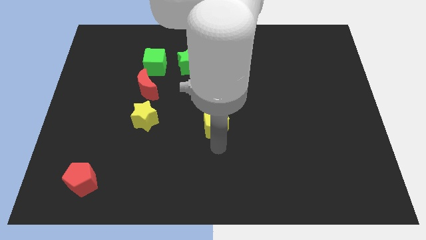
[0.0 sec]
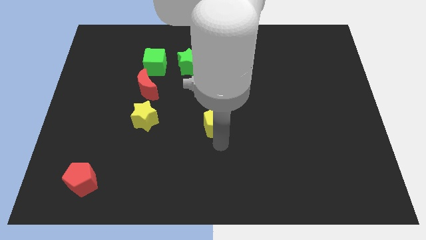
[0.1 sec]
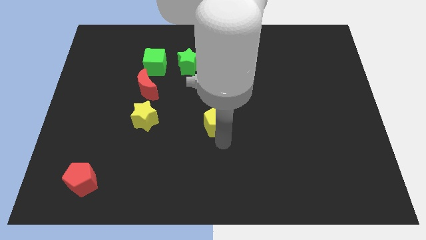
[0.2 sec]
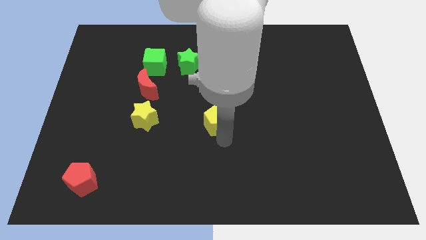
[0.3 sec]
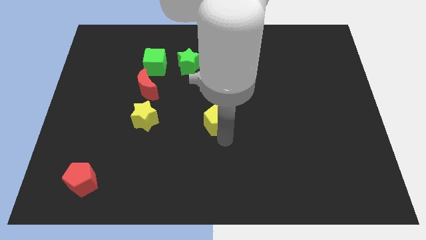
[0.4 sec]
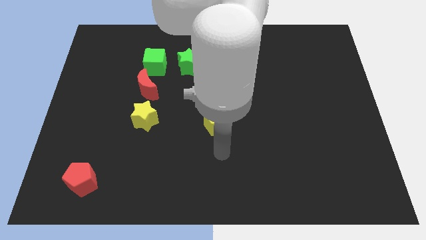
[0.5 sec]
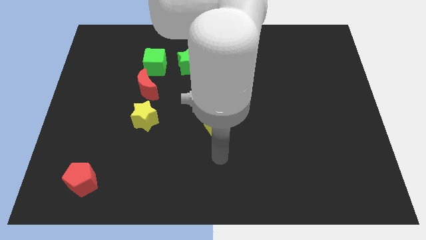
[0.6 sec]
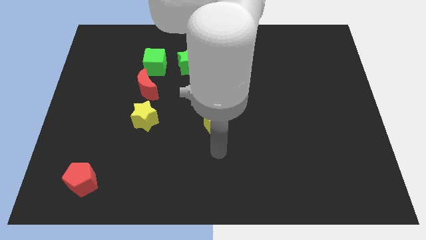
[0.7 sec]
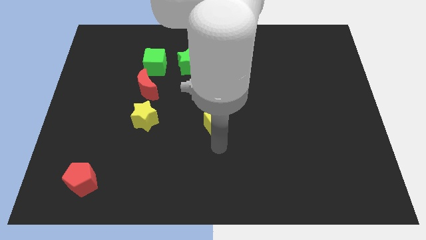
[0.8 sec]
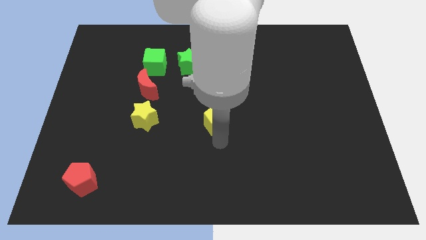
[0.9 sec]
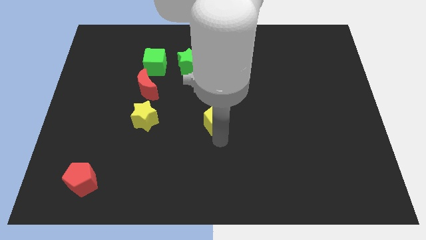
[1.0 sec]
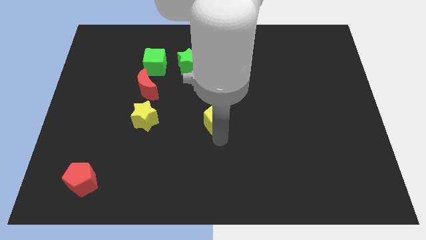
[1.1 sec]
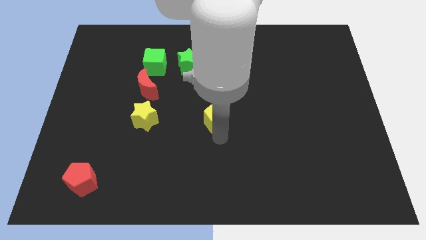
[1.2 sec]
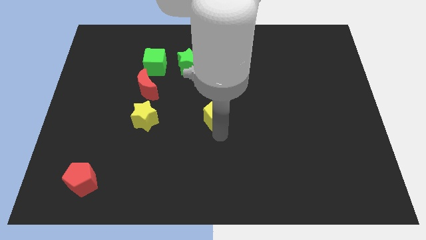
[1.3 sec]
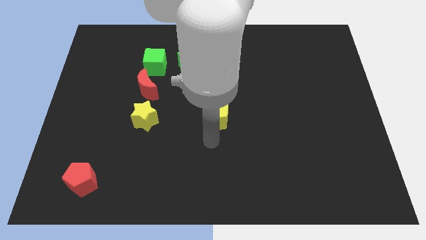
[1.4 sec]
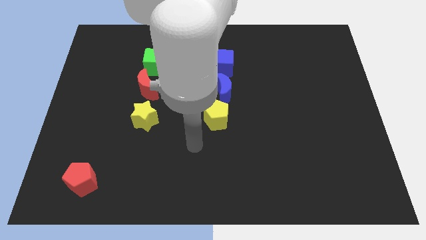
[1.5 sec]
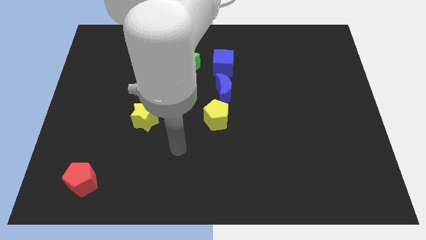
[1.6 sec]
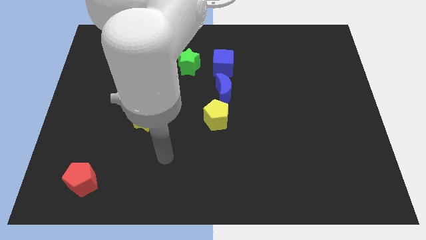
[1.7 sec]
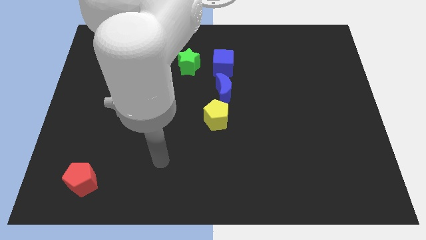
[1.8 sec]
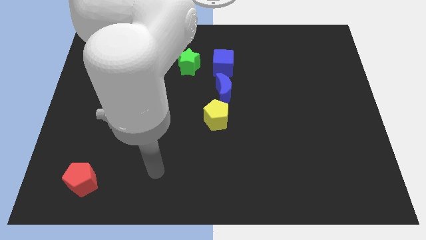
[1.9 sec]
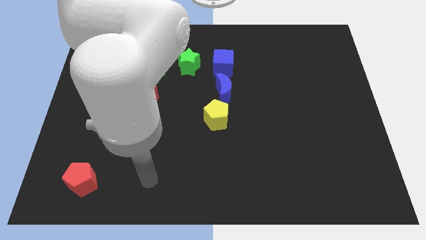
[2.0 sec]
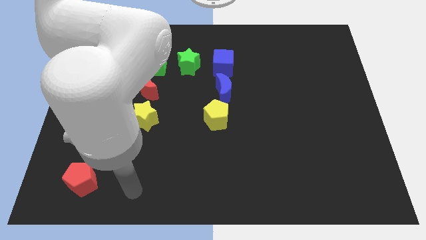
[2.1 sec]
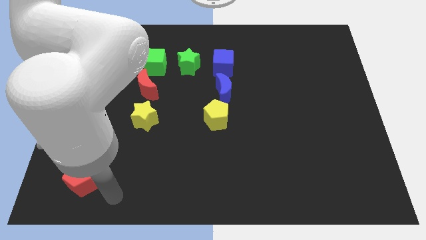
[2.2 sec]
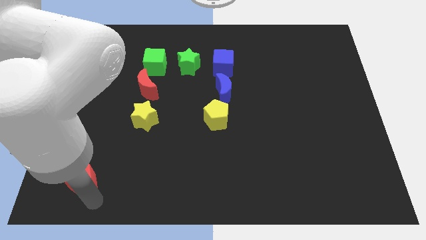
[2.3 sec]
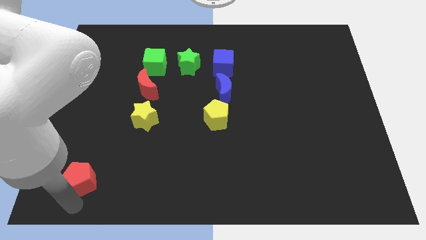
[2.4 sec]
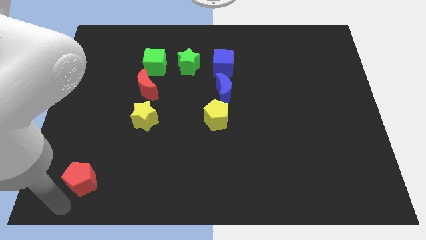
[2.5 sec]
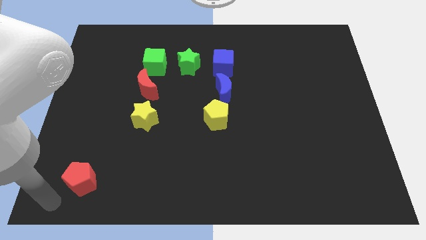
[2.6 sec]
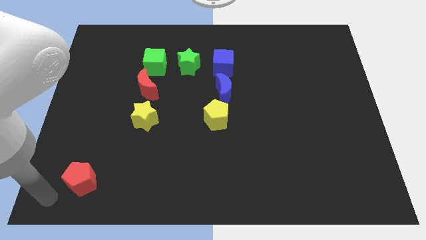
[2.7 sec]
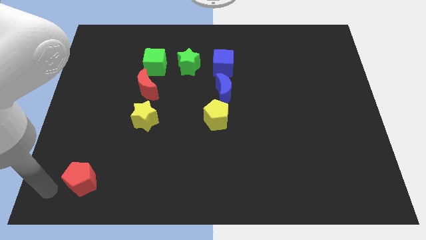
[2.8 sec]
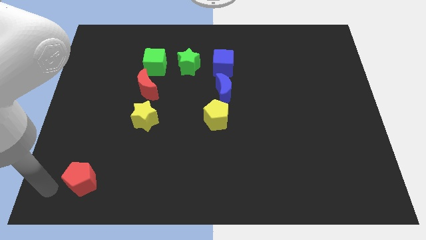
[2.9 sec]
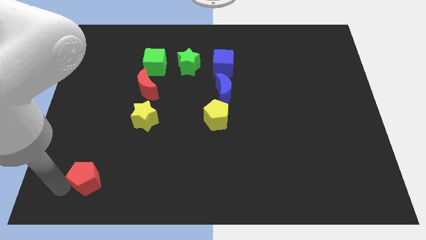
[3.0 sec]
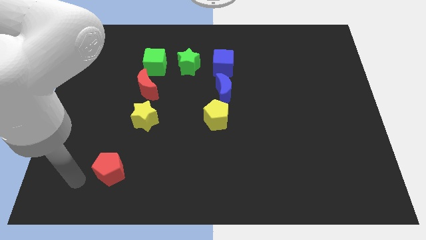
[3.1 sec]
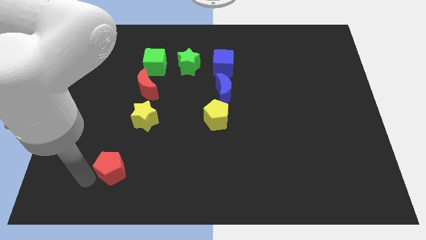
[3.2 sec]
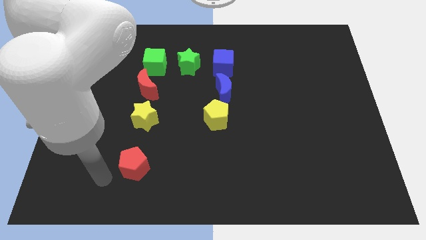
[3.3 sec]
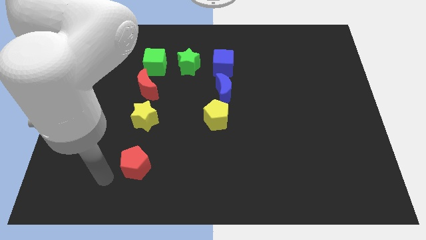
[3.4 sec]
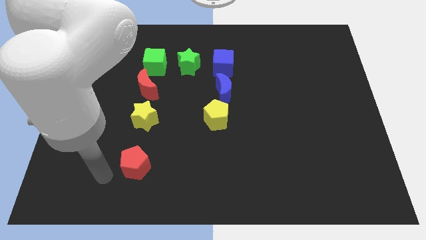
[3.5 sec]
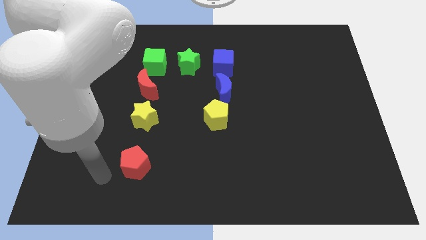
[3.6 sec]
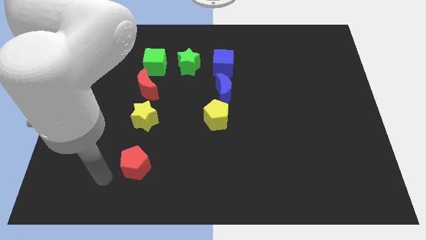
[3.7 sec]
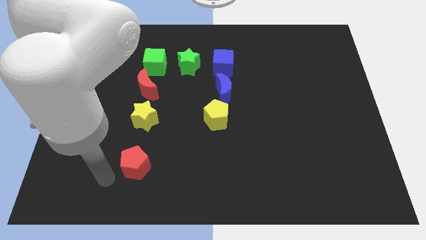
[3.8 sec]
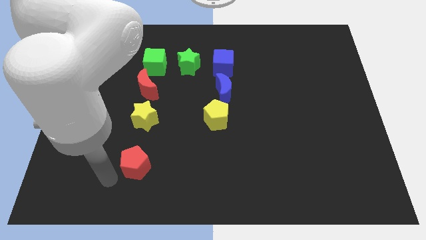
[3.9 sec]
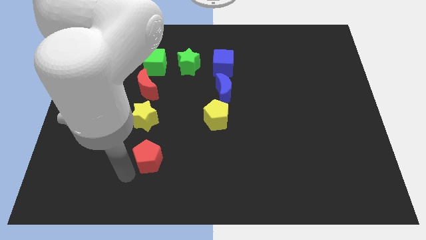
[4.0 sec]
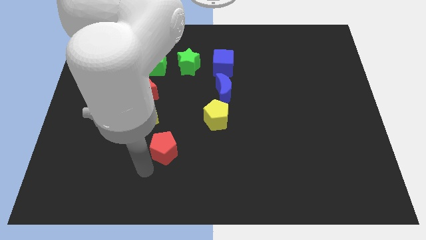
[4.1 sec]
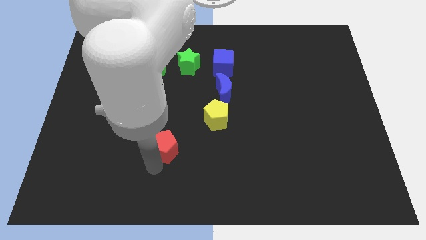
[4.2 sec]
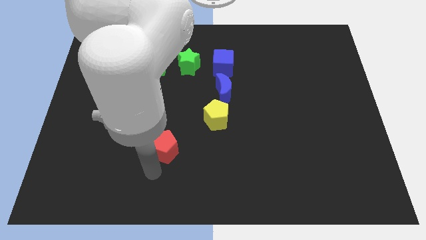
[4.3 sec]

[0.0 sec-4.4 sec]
slide the red pentagon towards the yellow pentagon

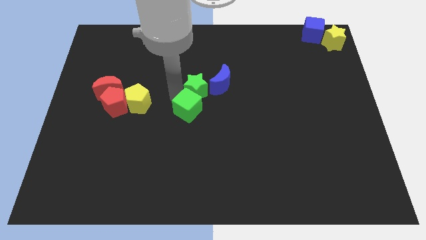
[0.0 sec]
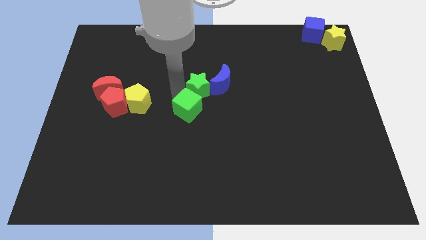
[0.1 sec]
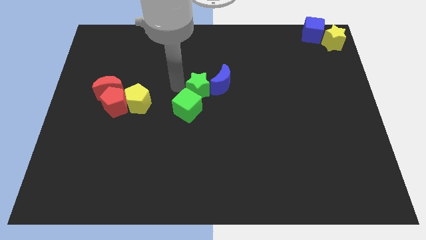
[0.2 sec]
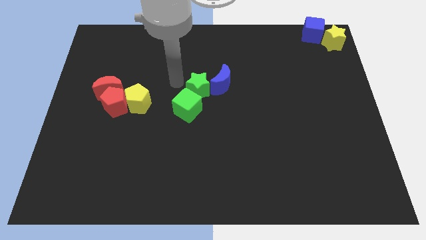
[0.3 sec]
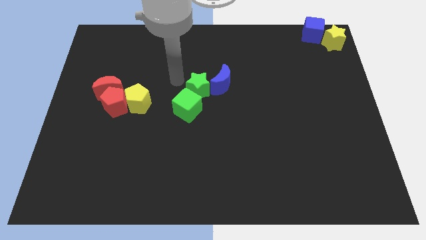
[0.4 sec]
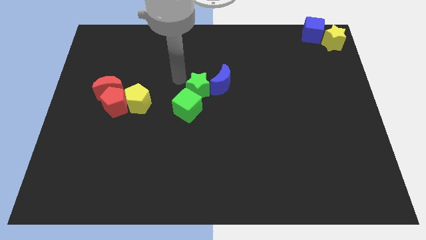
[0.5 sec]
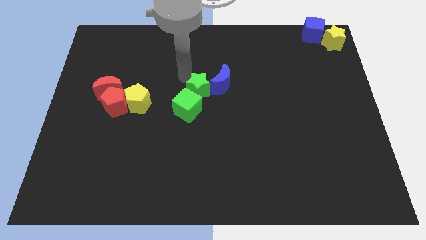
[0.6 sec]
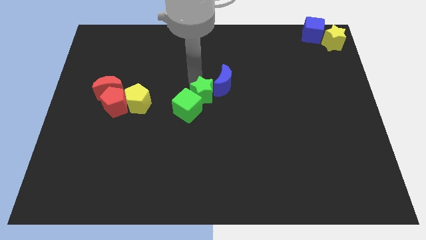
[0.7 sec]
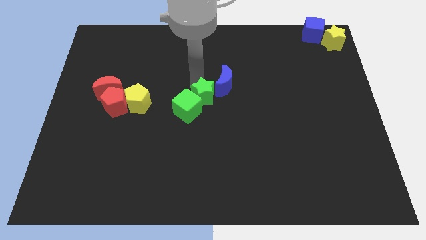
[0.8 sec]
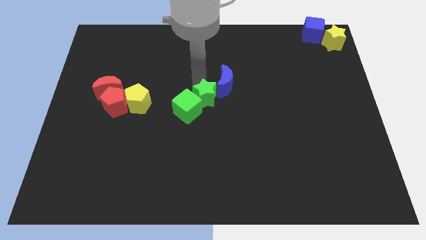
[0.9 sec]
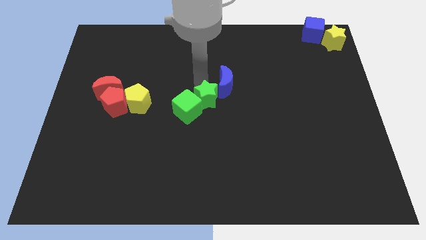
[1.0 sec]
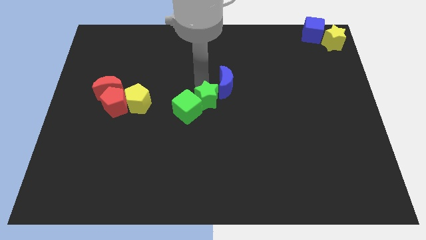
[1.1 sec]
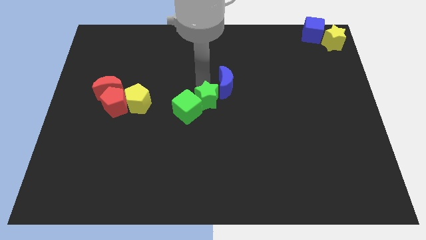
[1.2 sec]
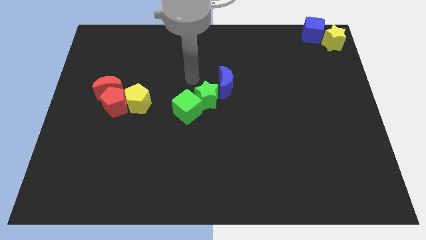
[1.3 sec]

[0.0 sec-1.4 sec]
push the green star between the green cube and blue crescent

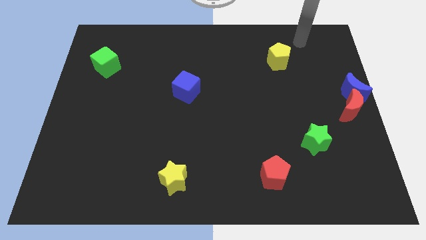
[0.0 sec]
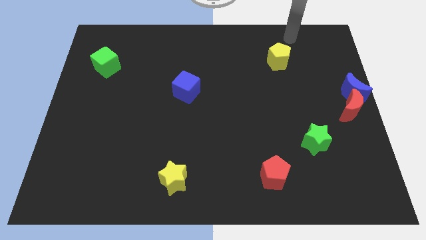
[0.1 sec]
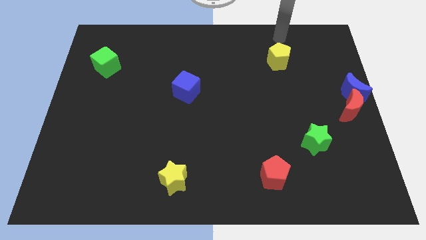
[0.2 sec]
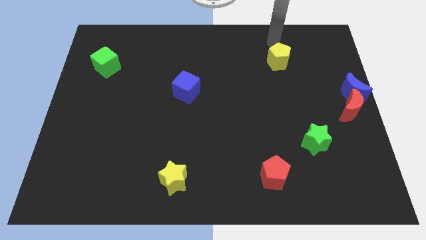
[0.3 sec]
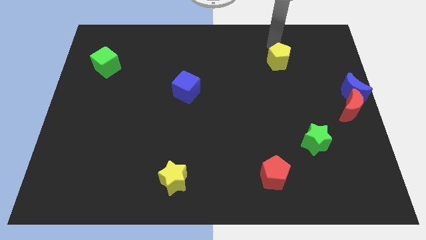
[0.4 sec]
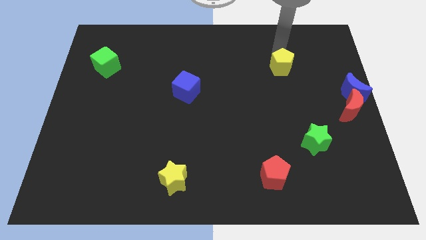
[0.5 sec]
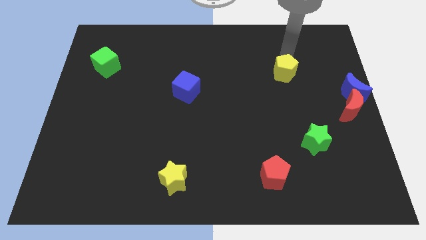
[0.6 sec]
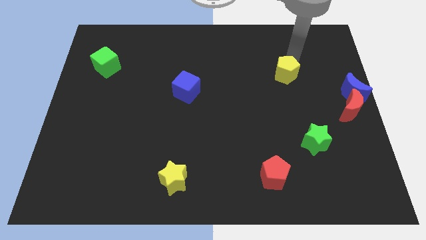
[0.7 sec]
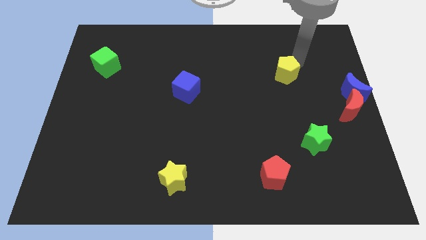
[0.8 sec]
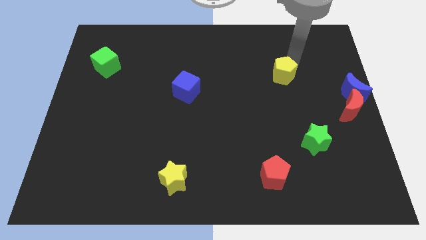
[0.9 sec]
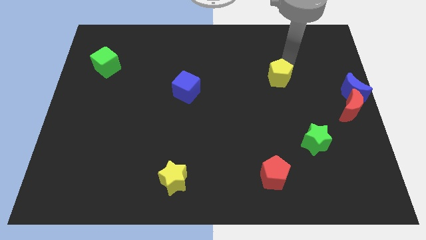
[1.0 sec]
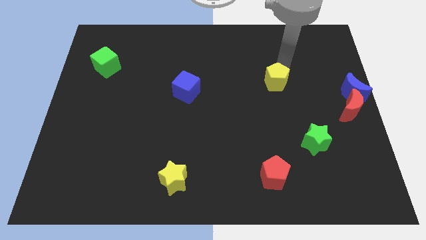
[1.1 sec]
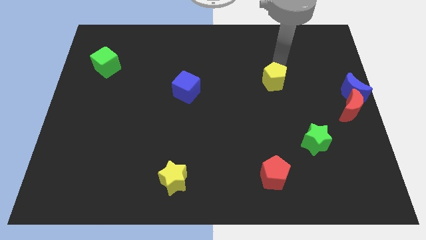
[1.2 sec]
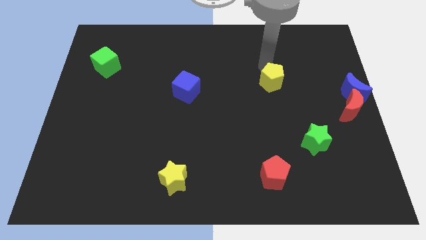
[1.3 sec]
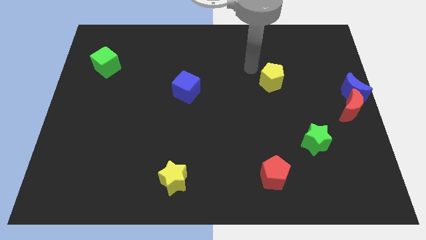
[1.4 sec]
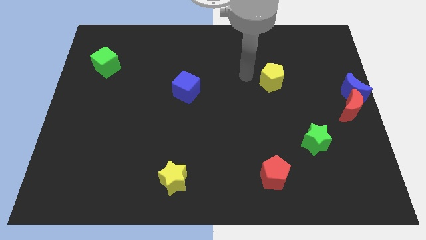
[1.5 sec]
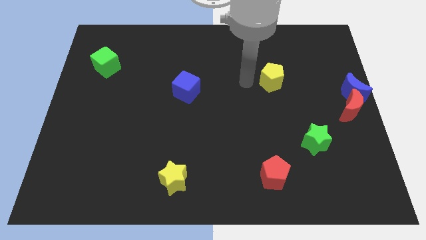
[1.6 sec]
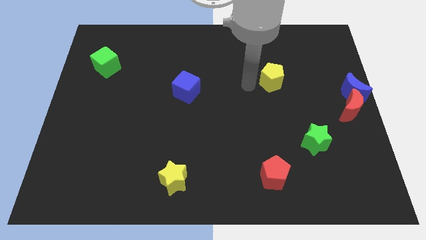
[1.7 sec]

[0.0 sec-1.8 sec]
push the yellow pentagon downwards slightly to the center of the board

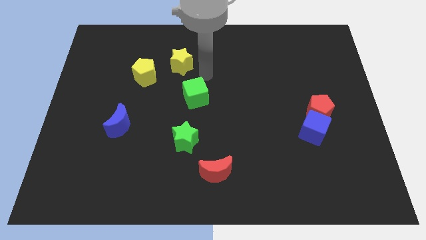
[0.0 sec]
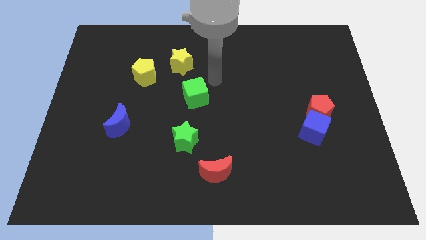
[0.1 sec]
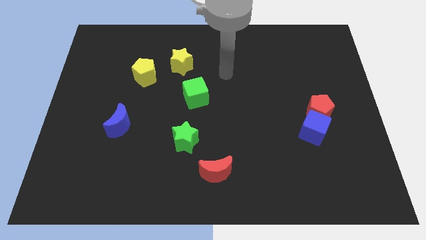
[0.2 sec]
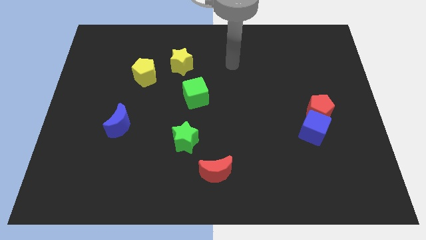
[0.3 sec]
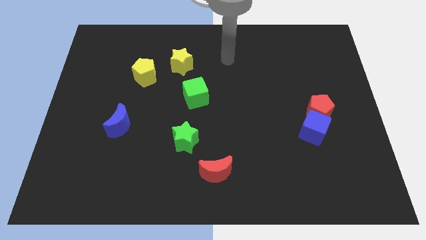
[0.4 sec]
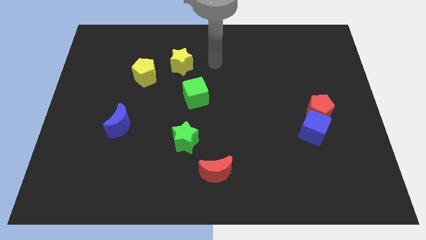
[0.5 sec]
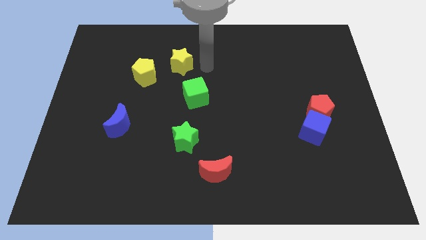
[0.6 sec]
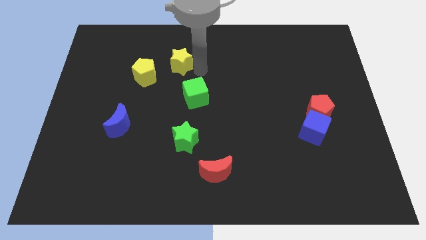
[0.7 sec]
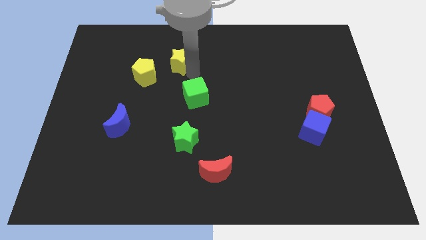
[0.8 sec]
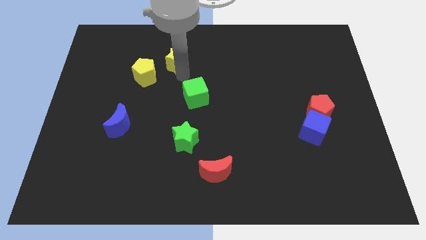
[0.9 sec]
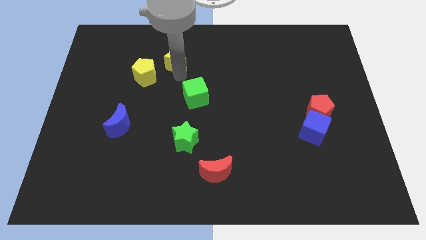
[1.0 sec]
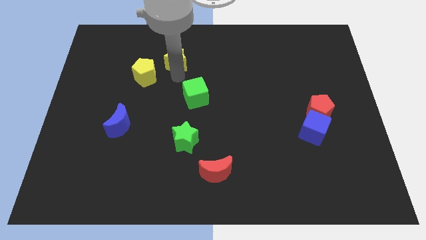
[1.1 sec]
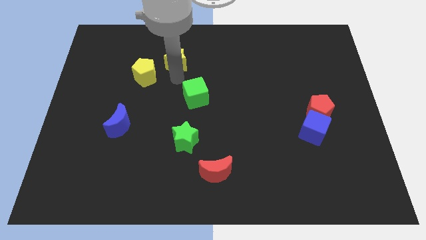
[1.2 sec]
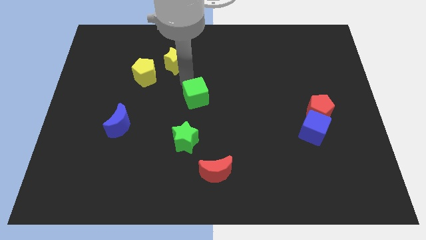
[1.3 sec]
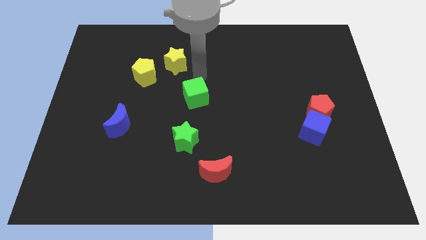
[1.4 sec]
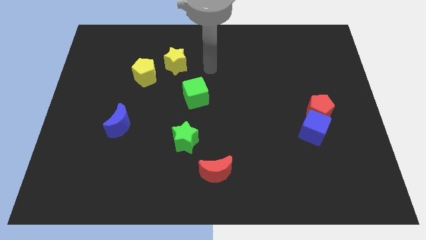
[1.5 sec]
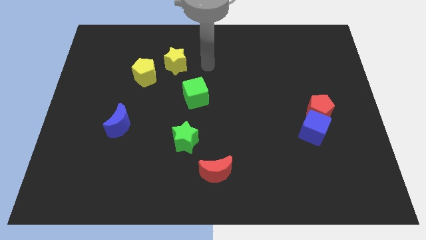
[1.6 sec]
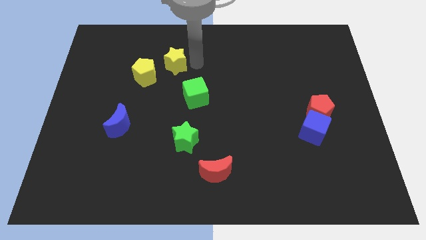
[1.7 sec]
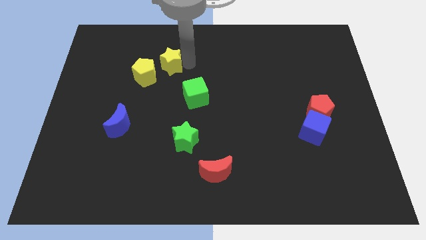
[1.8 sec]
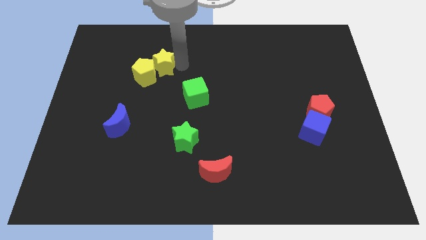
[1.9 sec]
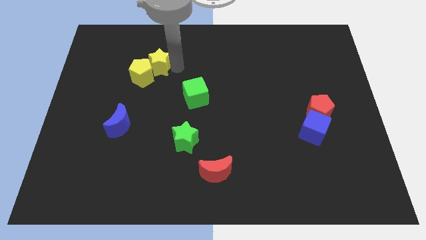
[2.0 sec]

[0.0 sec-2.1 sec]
push the yellow star towards the yellow pentagon
